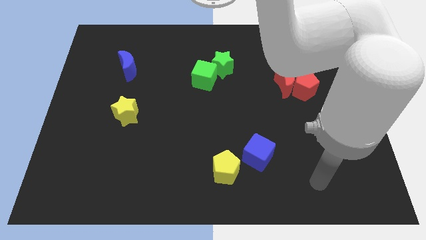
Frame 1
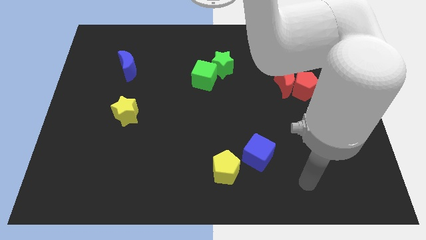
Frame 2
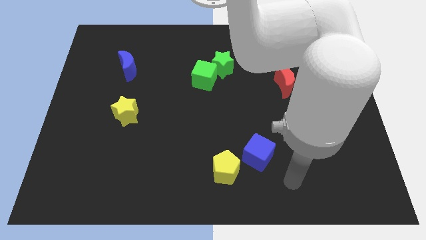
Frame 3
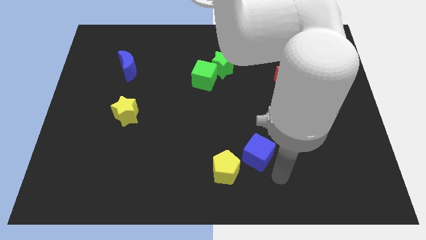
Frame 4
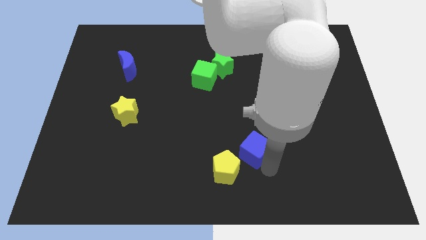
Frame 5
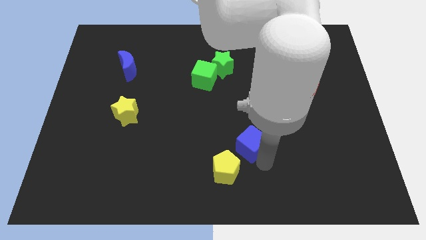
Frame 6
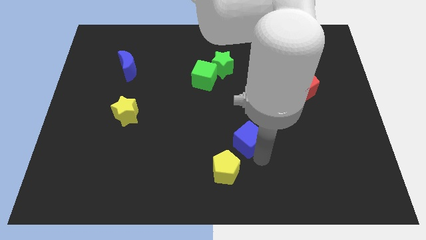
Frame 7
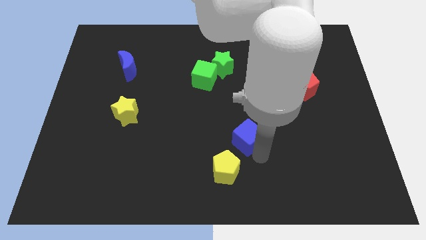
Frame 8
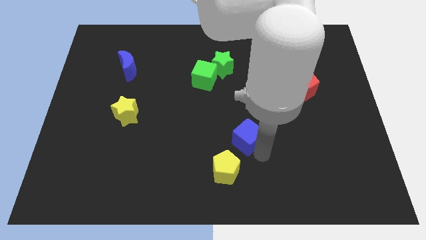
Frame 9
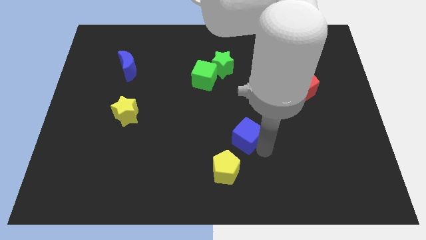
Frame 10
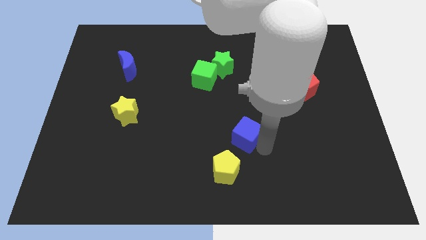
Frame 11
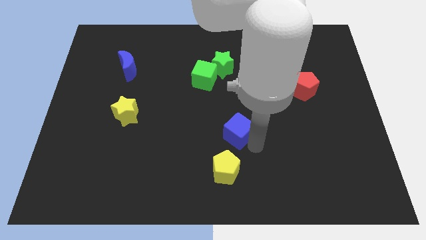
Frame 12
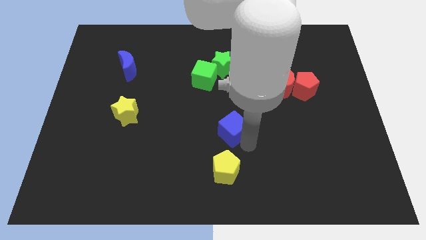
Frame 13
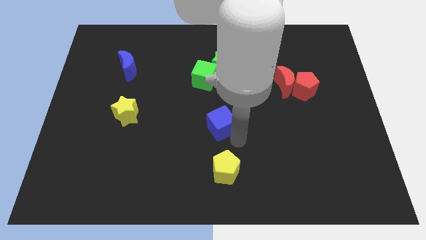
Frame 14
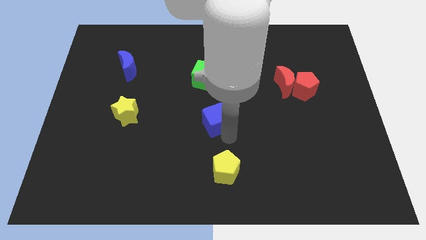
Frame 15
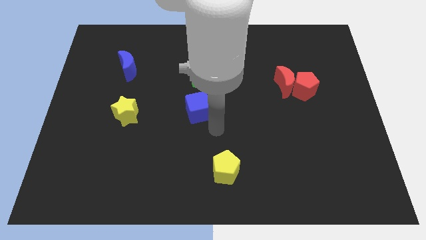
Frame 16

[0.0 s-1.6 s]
push the blue cube below the green cube

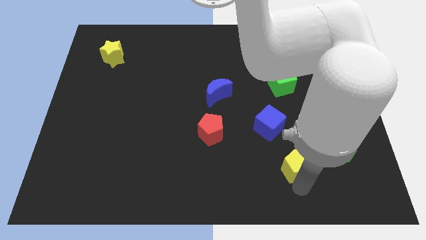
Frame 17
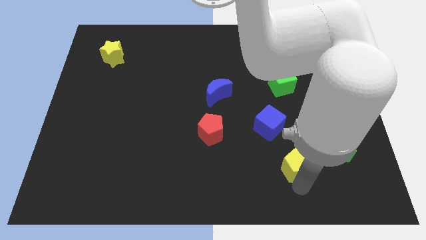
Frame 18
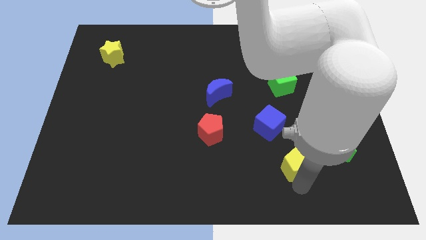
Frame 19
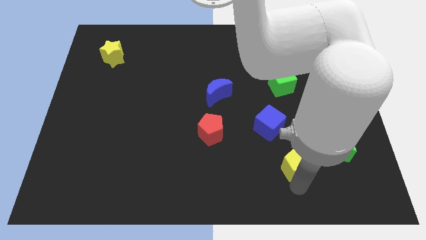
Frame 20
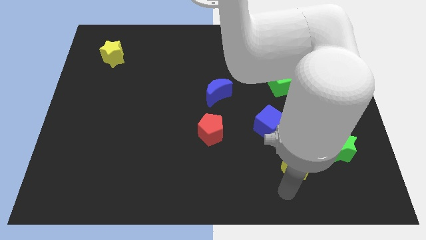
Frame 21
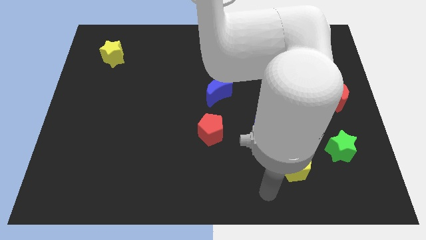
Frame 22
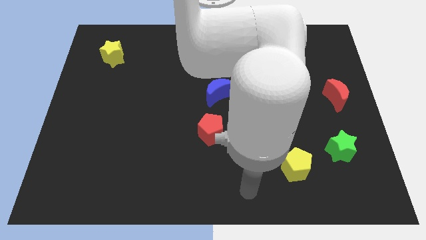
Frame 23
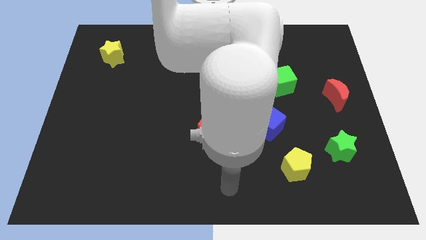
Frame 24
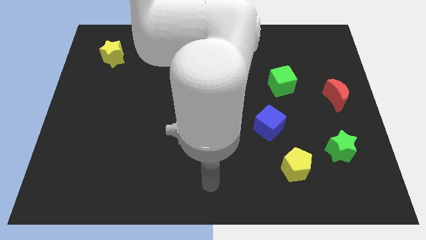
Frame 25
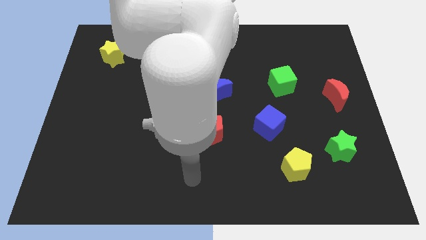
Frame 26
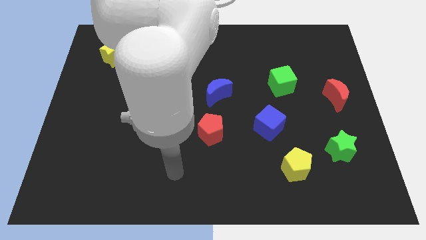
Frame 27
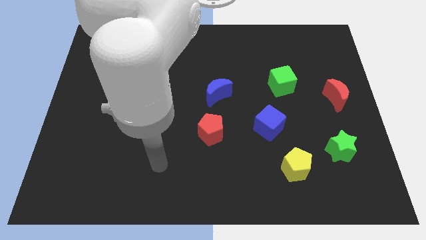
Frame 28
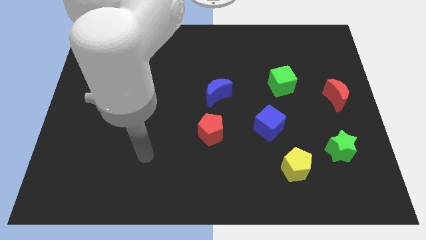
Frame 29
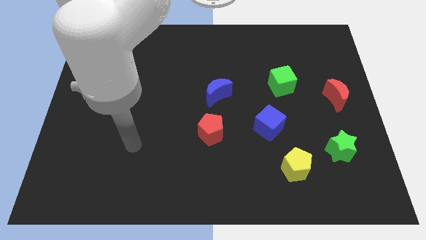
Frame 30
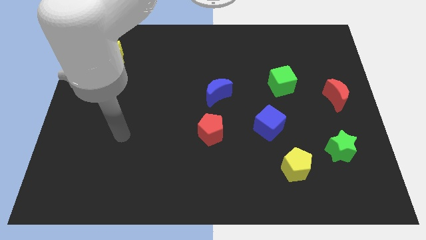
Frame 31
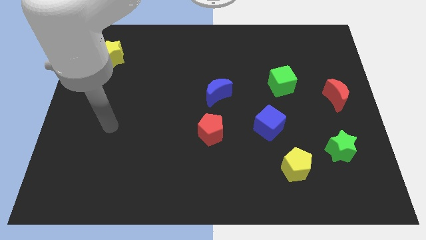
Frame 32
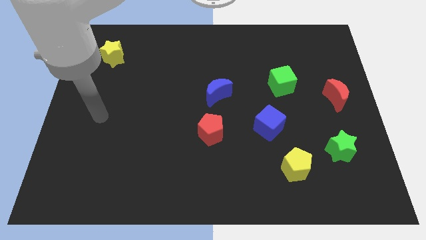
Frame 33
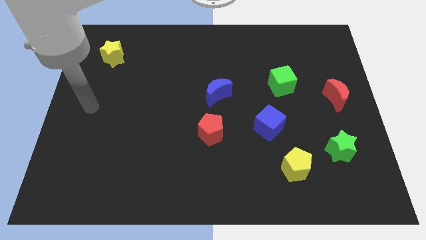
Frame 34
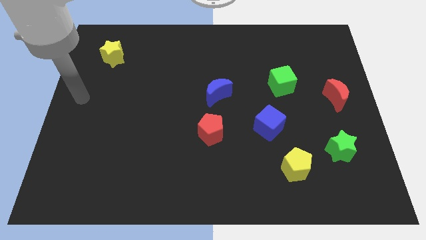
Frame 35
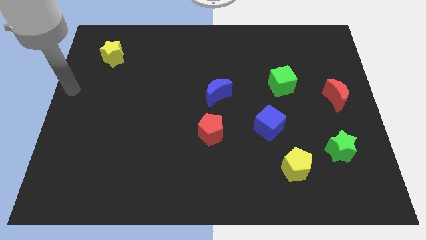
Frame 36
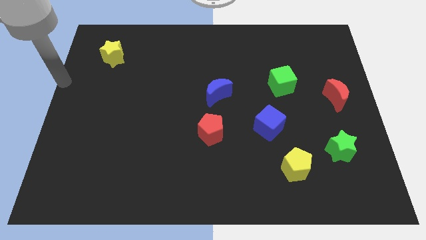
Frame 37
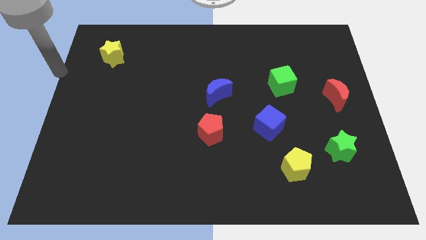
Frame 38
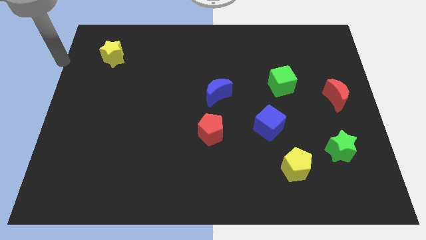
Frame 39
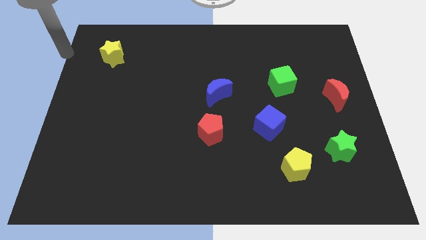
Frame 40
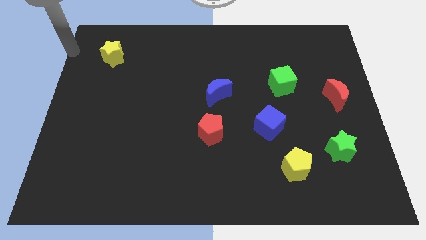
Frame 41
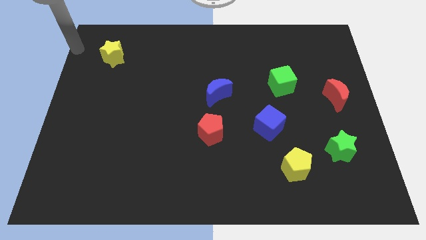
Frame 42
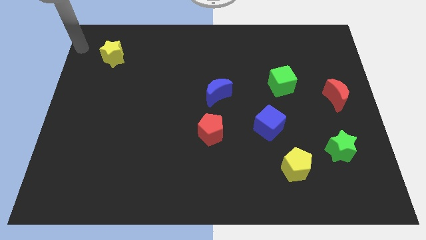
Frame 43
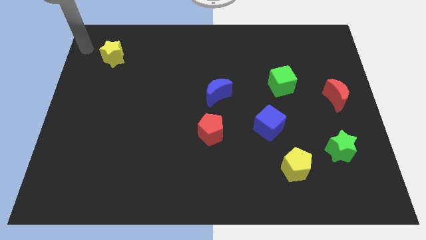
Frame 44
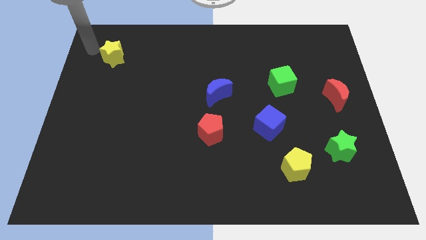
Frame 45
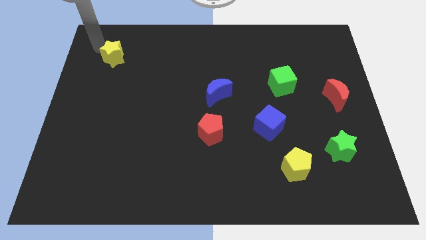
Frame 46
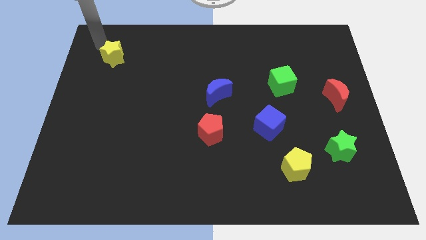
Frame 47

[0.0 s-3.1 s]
move your arm away from yellow pentagon

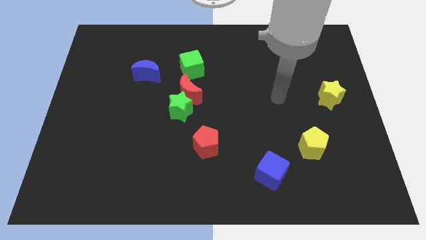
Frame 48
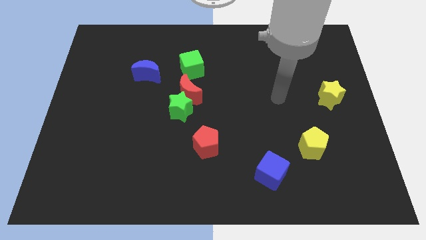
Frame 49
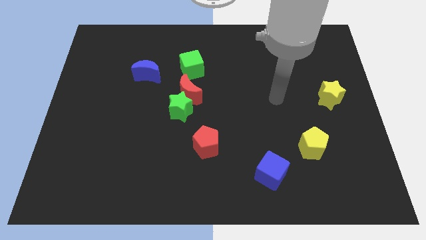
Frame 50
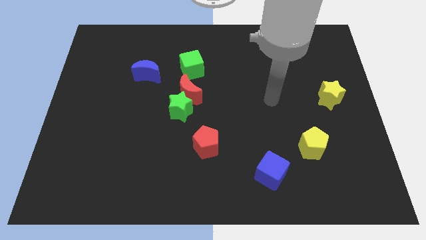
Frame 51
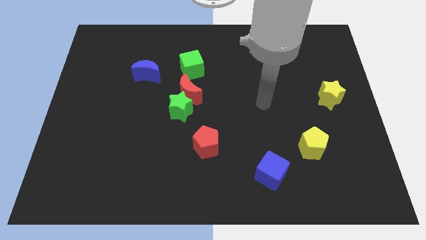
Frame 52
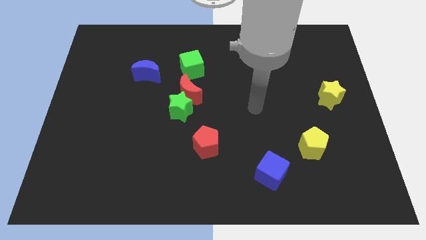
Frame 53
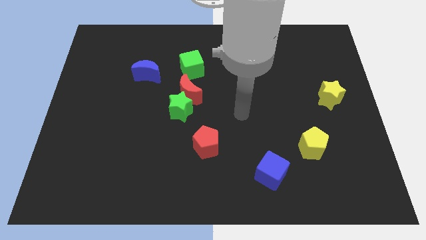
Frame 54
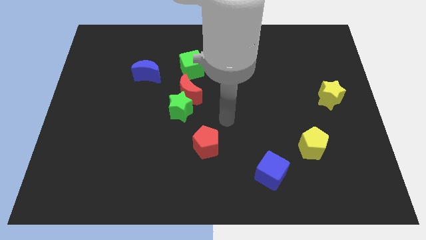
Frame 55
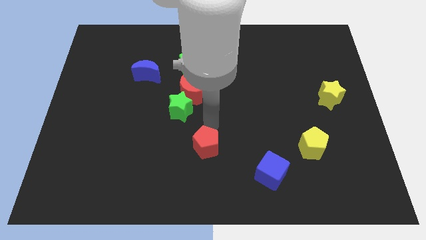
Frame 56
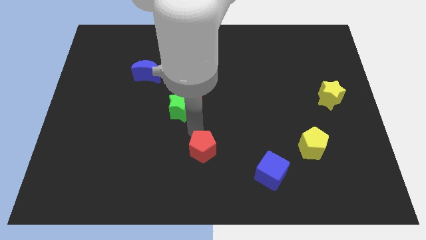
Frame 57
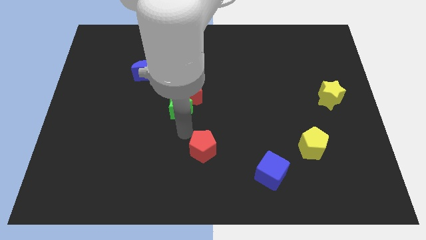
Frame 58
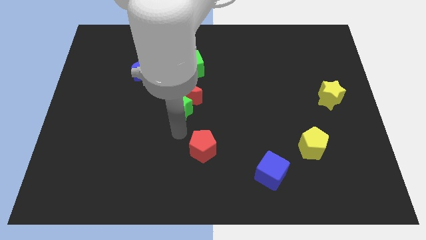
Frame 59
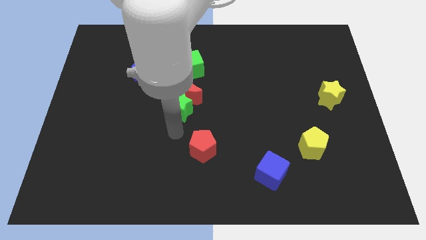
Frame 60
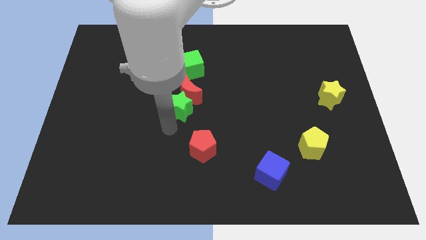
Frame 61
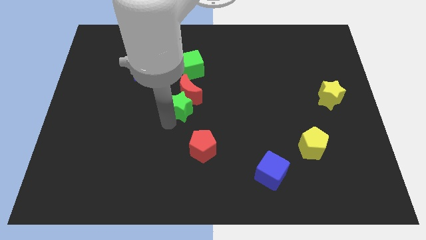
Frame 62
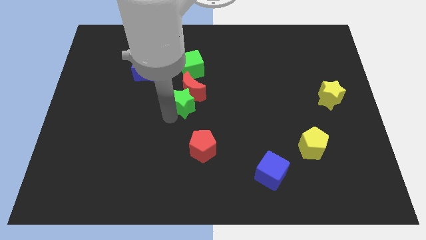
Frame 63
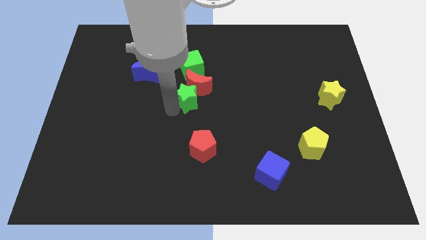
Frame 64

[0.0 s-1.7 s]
move your arm close to the green star

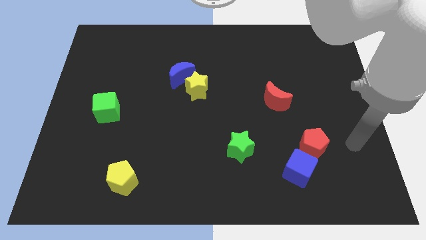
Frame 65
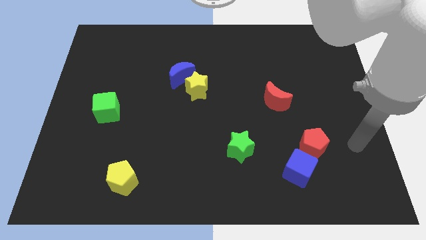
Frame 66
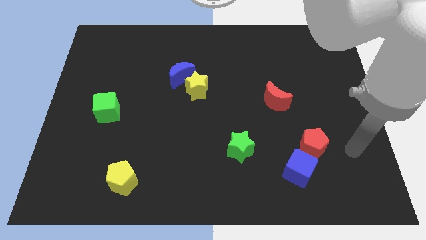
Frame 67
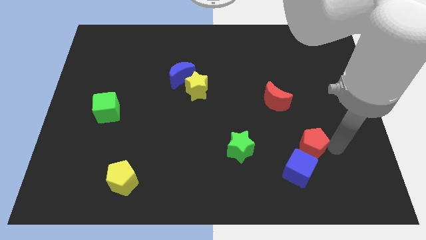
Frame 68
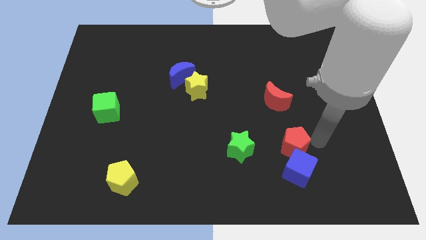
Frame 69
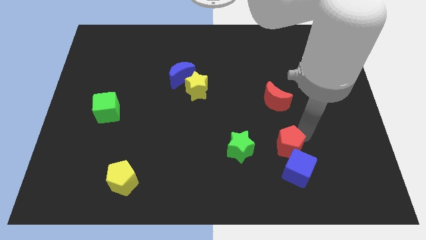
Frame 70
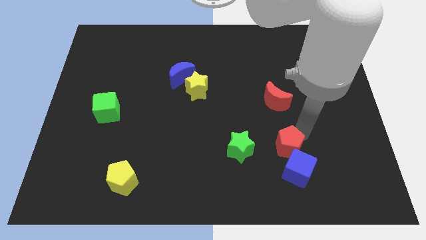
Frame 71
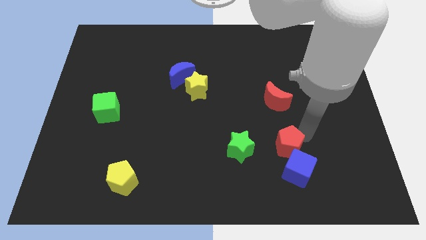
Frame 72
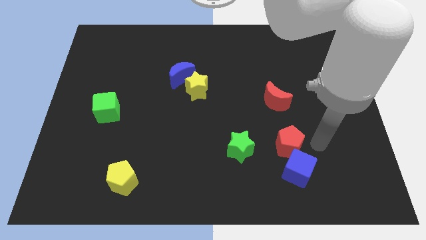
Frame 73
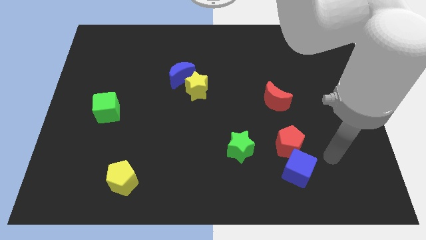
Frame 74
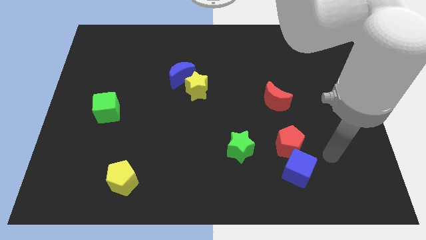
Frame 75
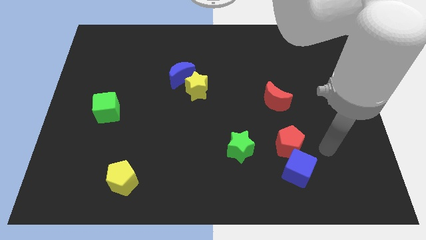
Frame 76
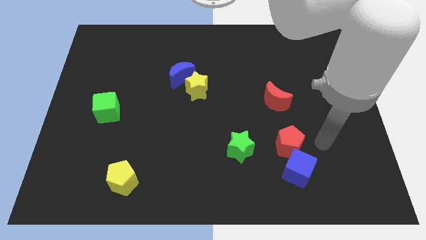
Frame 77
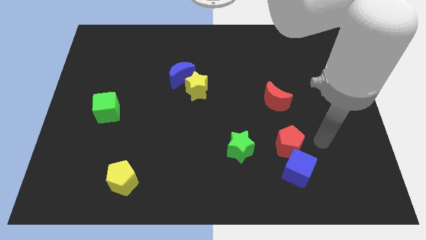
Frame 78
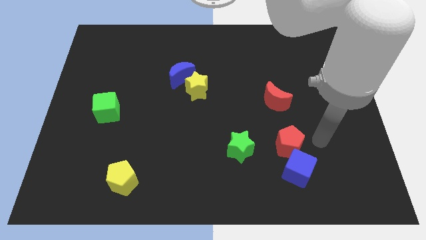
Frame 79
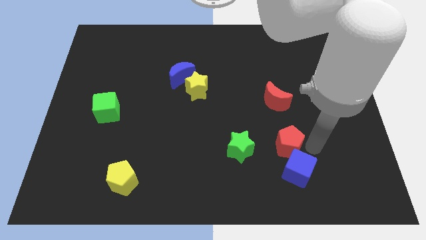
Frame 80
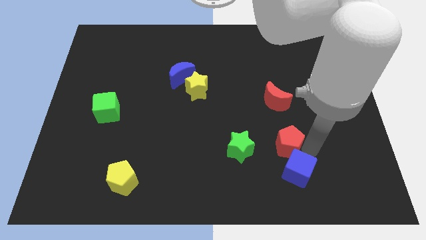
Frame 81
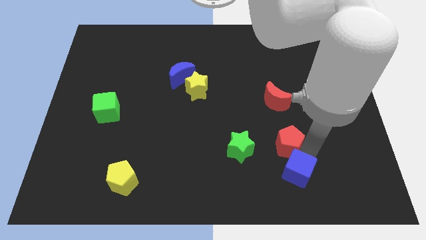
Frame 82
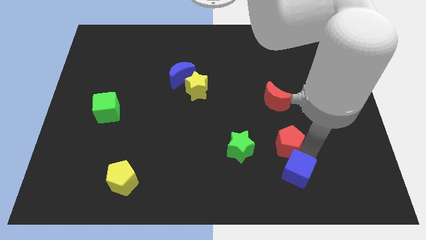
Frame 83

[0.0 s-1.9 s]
move the red pentagon to the top side of blue cube

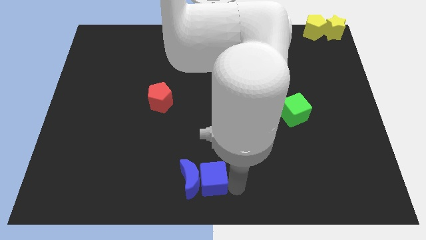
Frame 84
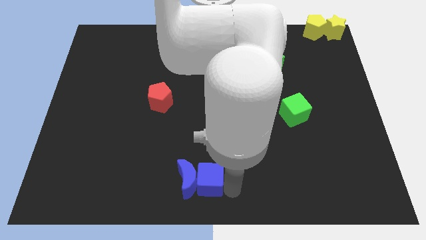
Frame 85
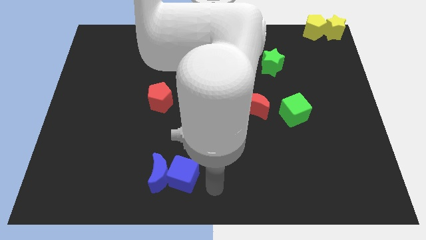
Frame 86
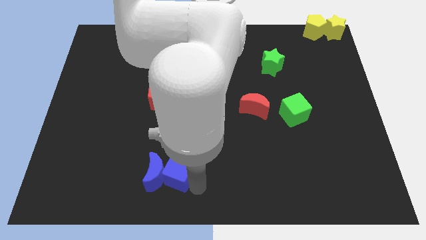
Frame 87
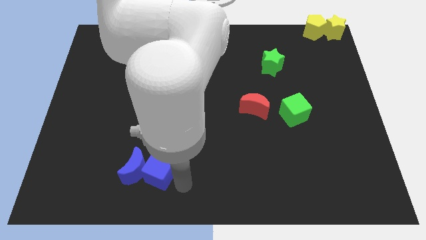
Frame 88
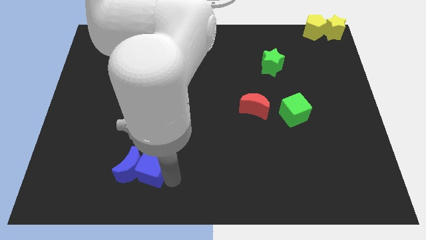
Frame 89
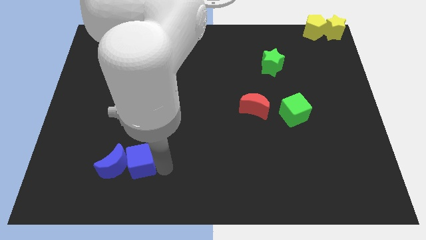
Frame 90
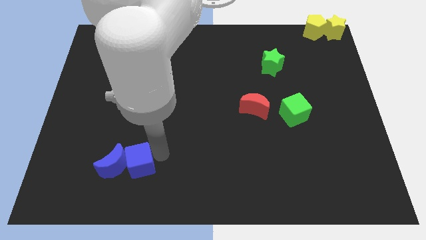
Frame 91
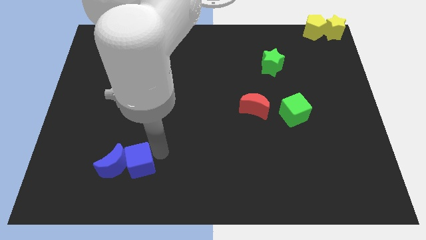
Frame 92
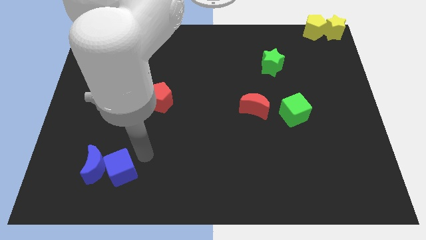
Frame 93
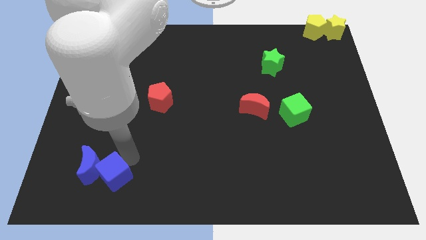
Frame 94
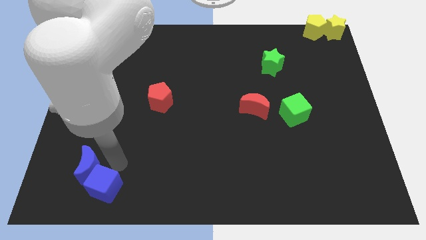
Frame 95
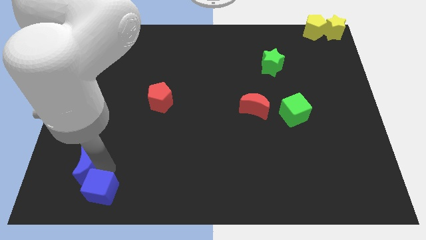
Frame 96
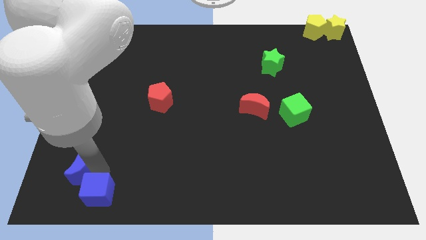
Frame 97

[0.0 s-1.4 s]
drag both the blue blocks towards the bottom left
